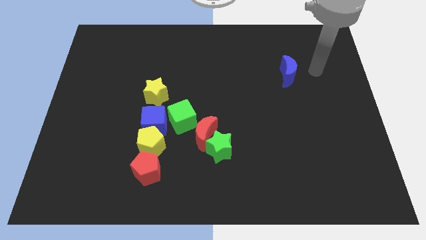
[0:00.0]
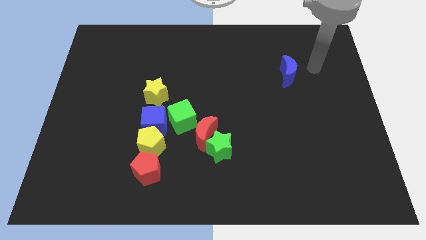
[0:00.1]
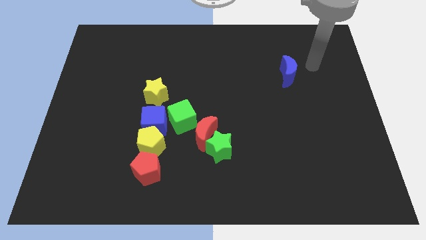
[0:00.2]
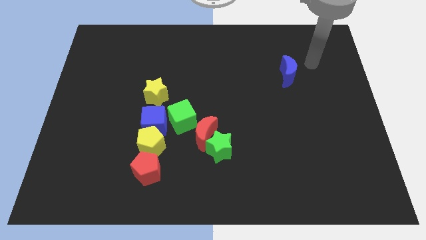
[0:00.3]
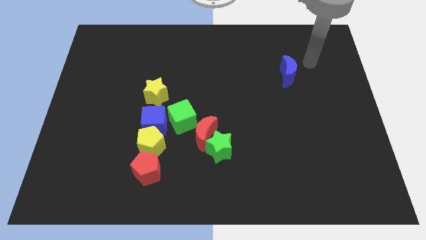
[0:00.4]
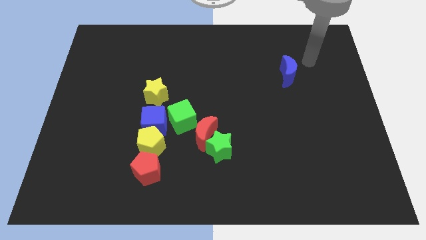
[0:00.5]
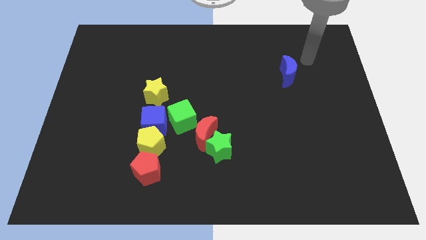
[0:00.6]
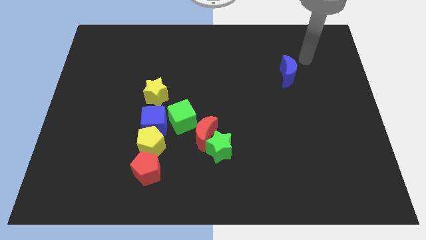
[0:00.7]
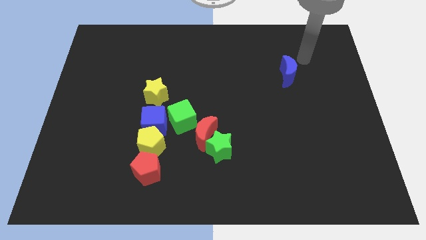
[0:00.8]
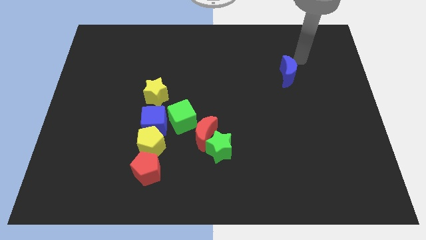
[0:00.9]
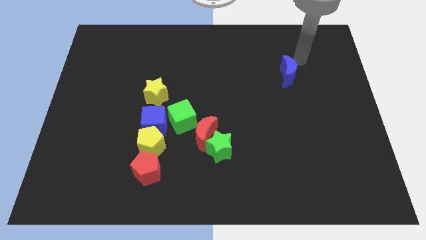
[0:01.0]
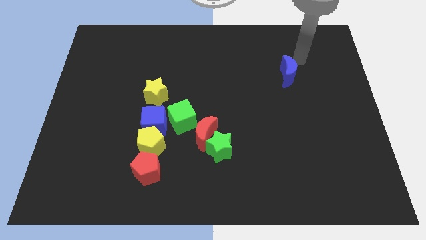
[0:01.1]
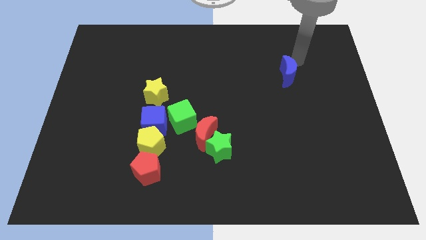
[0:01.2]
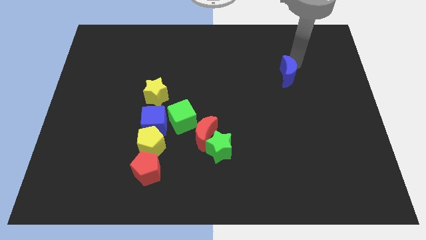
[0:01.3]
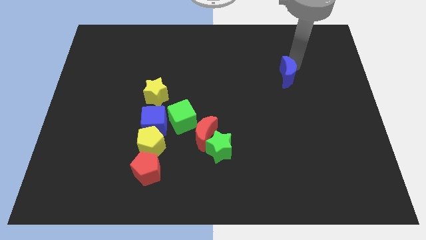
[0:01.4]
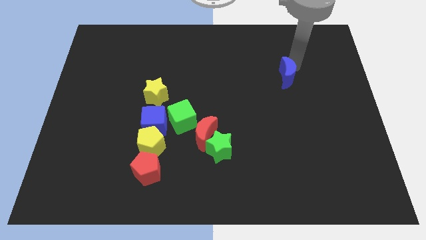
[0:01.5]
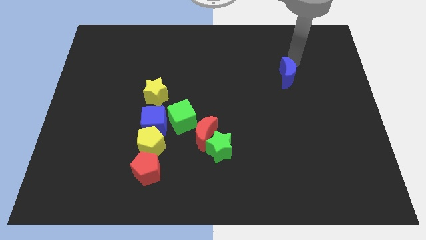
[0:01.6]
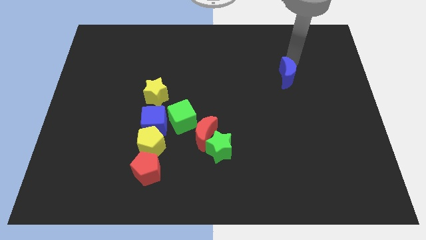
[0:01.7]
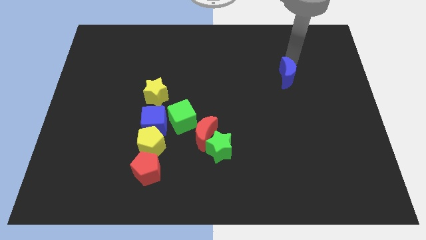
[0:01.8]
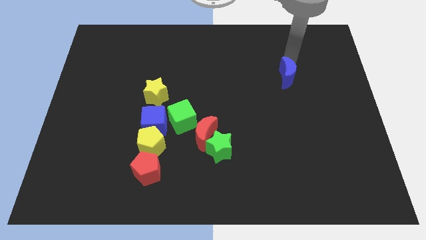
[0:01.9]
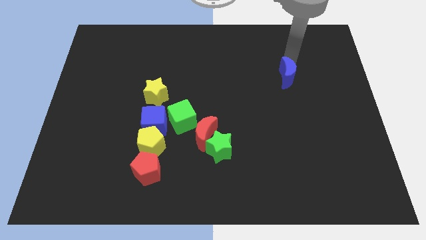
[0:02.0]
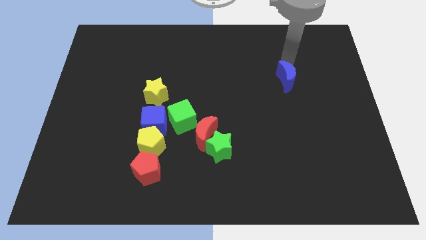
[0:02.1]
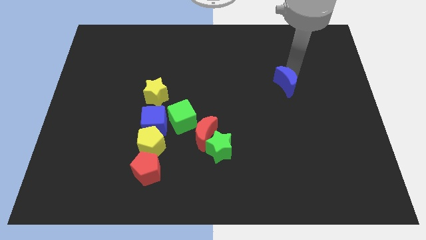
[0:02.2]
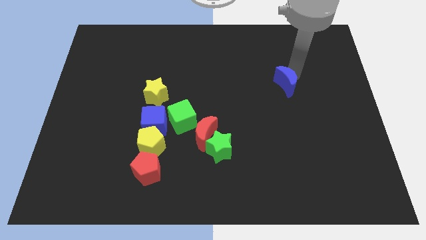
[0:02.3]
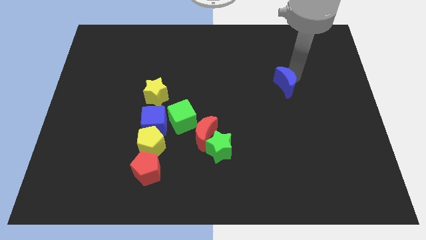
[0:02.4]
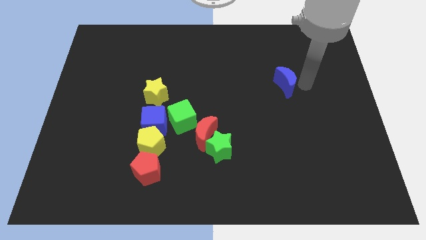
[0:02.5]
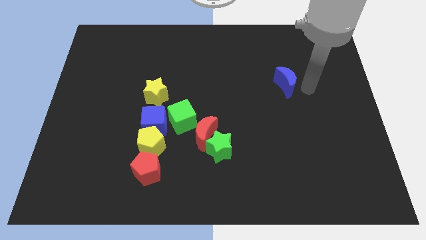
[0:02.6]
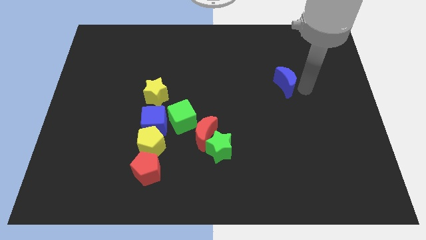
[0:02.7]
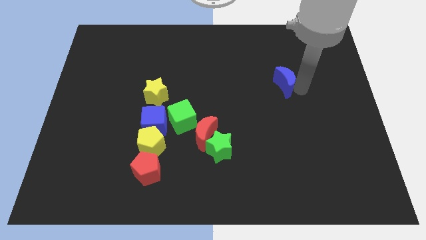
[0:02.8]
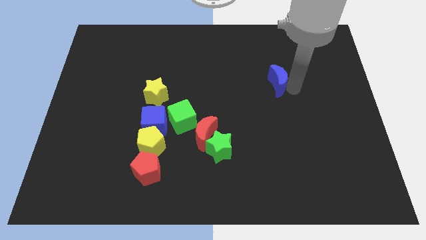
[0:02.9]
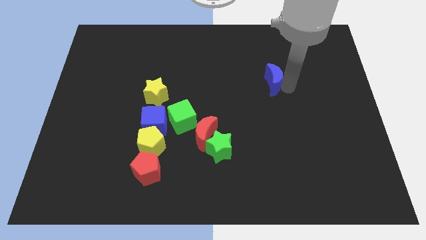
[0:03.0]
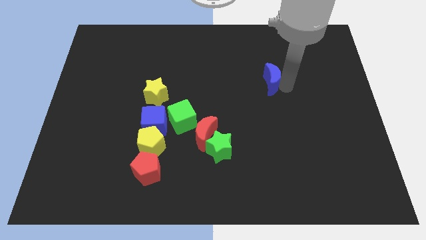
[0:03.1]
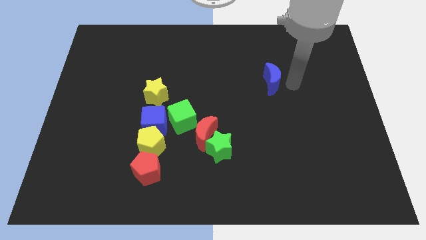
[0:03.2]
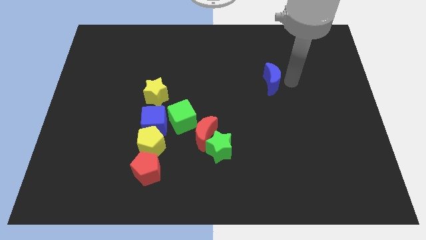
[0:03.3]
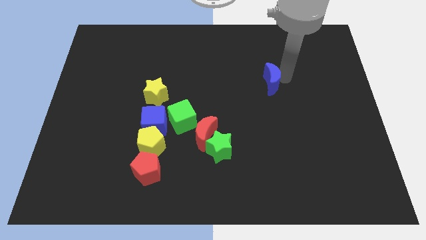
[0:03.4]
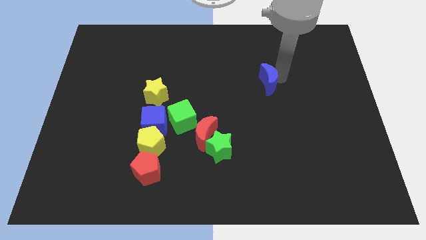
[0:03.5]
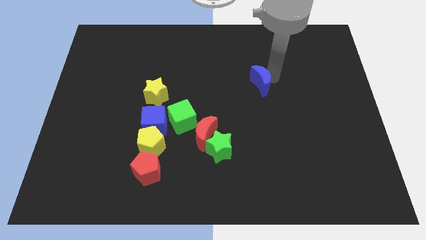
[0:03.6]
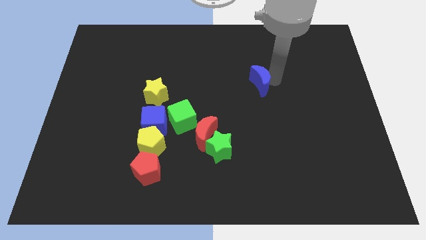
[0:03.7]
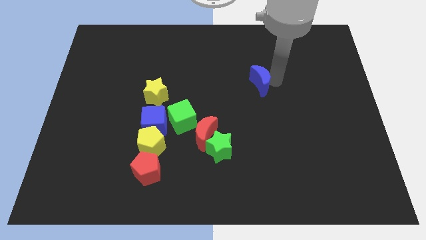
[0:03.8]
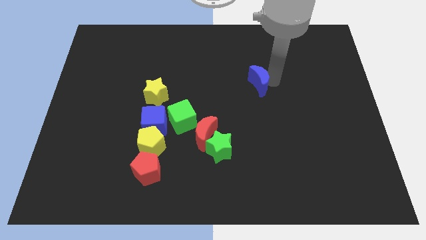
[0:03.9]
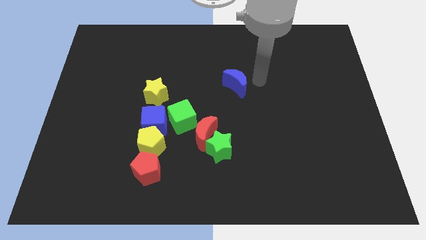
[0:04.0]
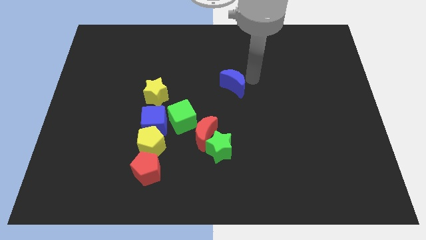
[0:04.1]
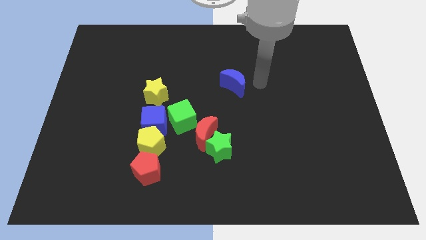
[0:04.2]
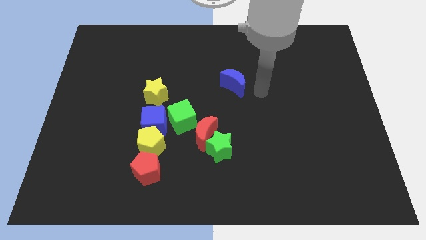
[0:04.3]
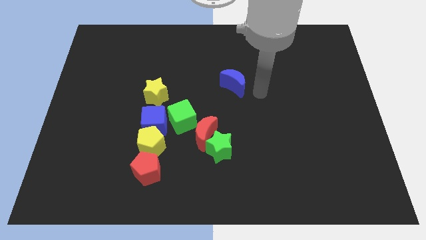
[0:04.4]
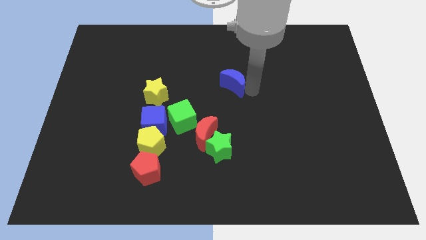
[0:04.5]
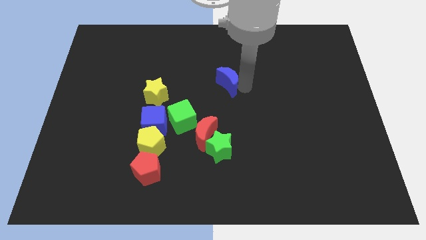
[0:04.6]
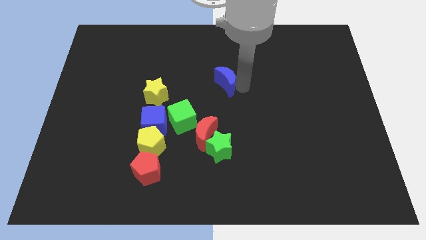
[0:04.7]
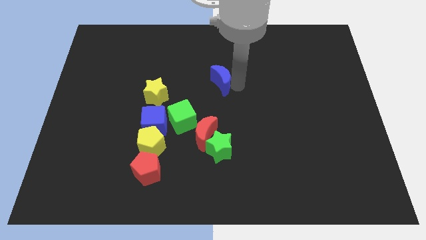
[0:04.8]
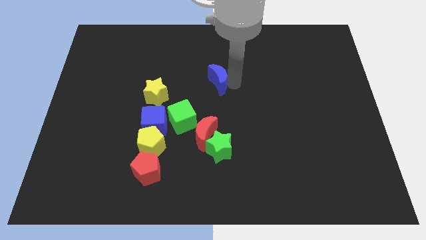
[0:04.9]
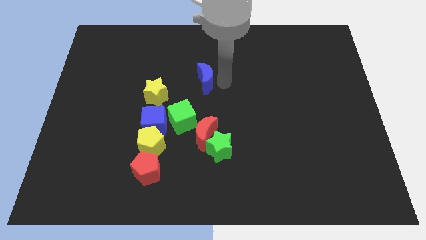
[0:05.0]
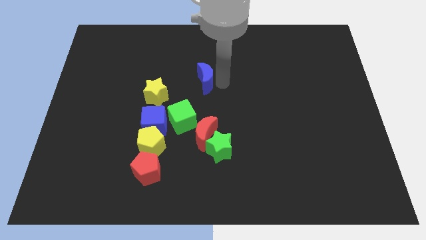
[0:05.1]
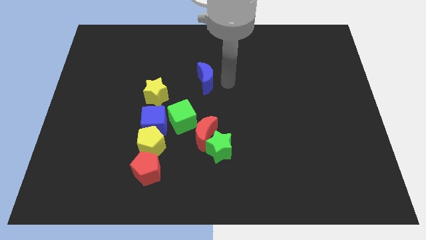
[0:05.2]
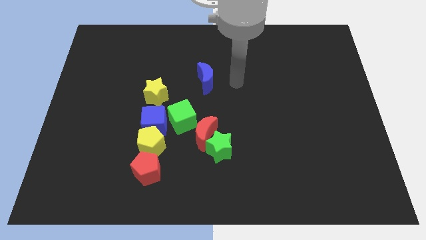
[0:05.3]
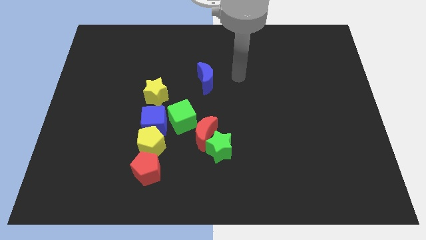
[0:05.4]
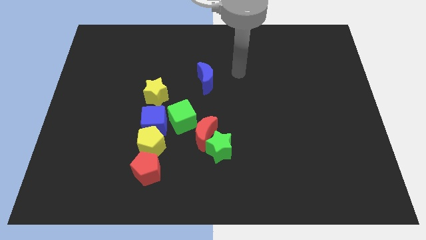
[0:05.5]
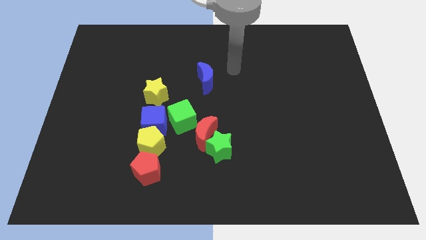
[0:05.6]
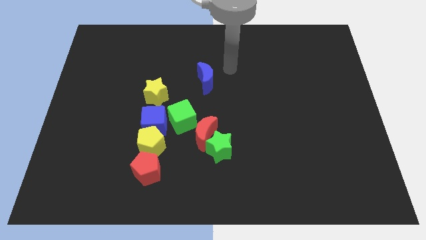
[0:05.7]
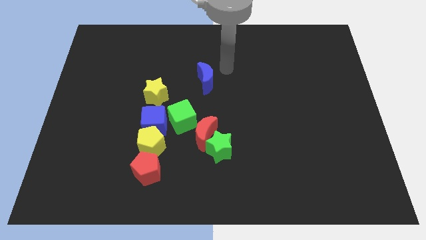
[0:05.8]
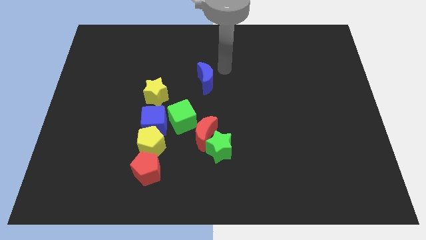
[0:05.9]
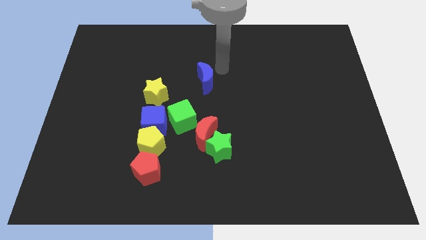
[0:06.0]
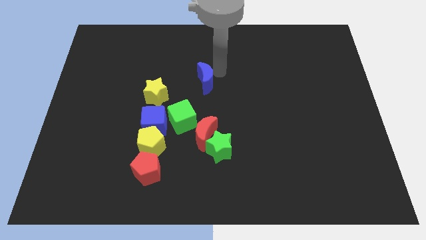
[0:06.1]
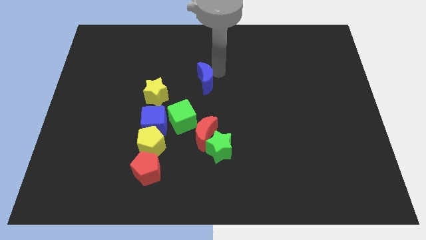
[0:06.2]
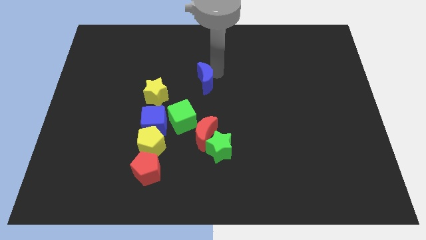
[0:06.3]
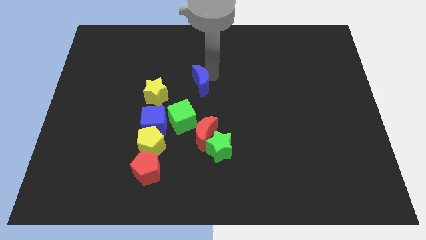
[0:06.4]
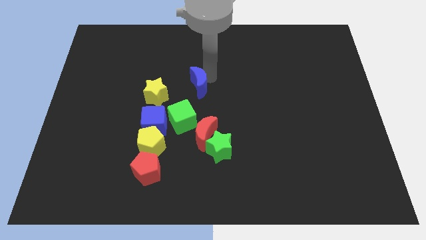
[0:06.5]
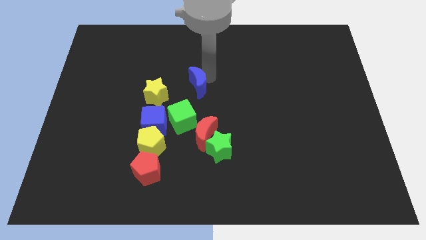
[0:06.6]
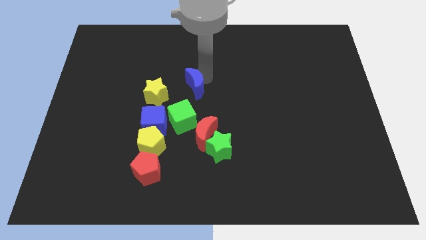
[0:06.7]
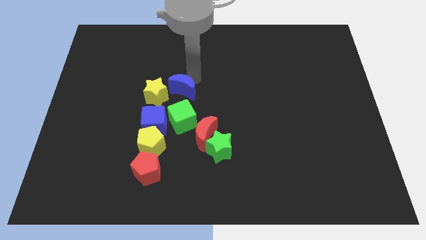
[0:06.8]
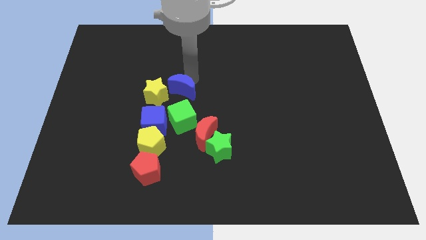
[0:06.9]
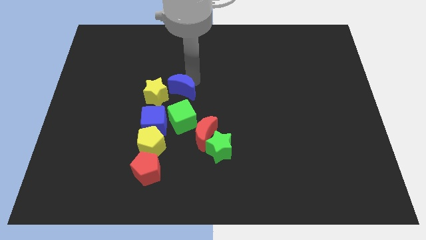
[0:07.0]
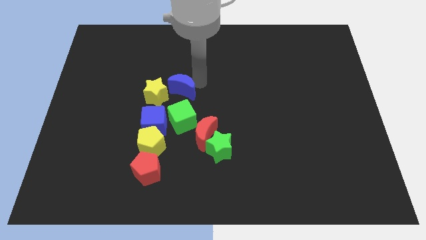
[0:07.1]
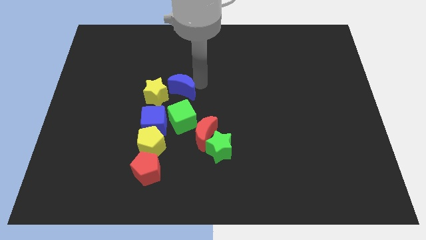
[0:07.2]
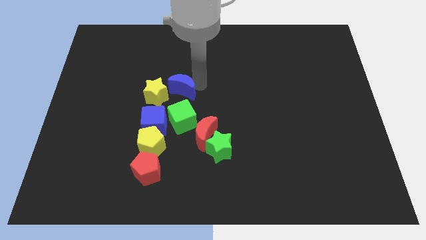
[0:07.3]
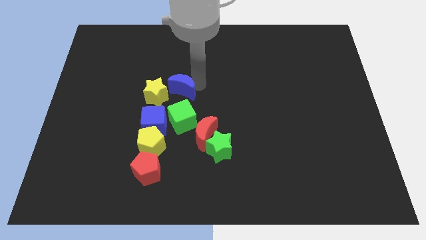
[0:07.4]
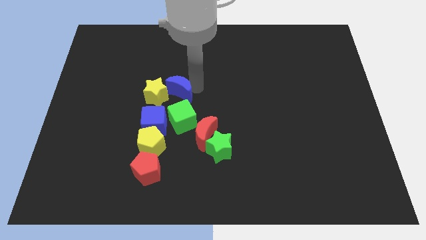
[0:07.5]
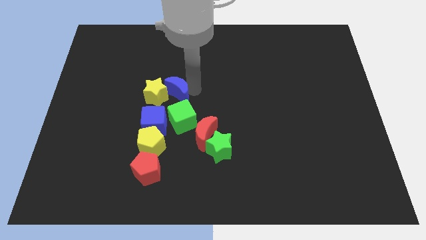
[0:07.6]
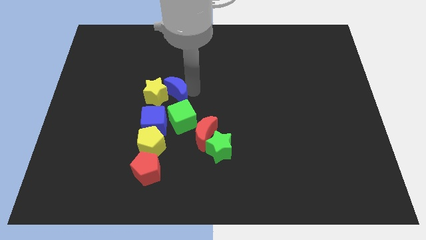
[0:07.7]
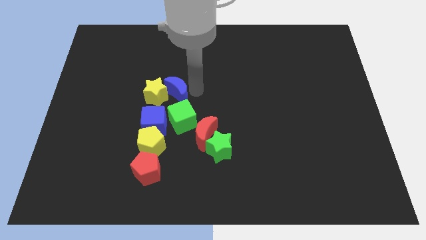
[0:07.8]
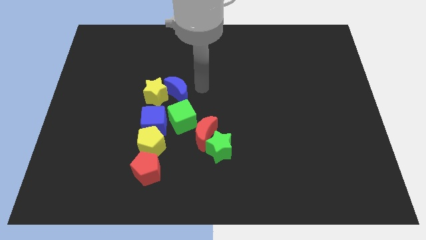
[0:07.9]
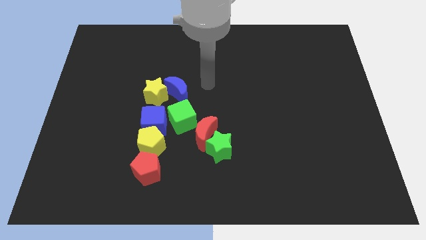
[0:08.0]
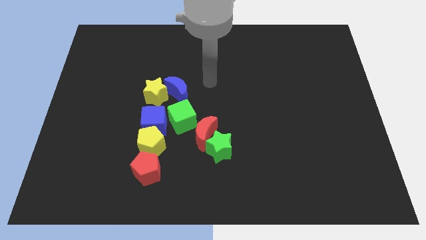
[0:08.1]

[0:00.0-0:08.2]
add blue moon into yellow star

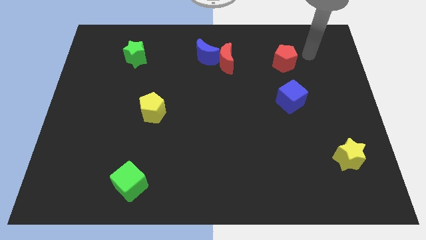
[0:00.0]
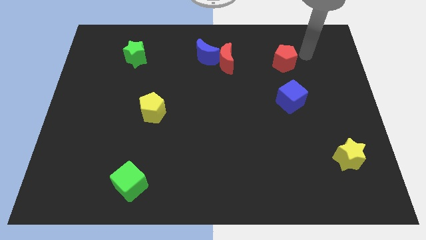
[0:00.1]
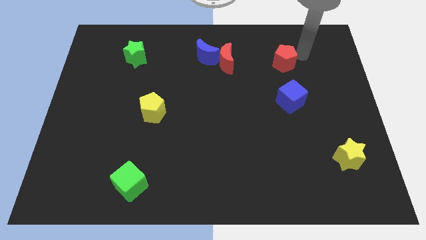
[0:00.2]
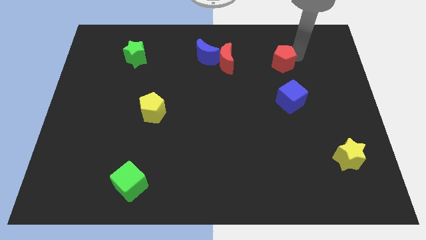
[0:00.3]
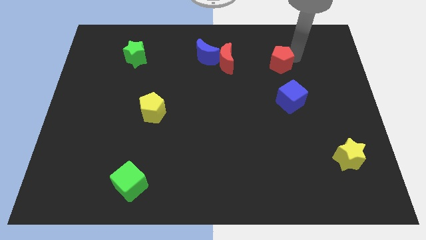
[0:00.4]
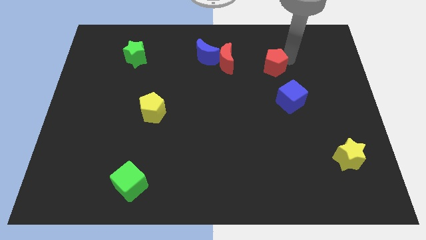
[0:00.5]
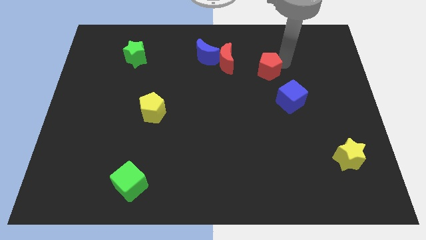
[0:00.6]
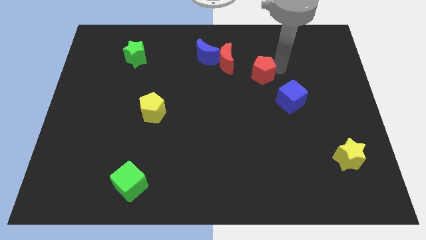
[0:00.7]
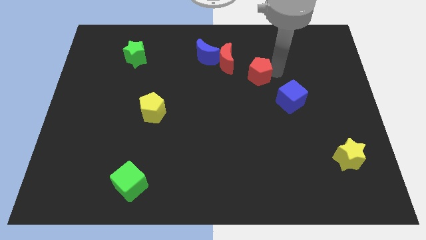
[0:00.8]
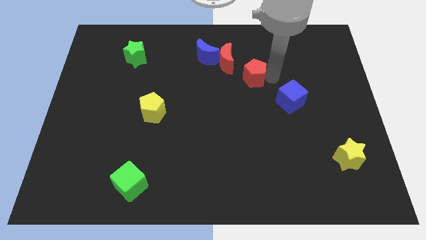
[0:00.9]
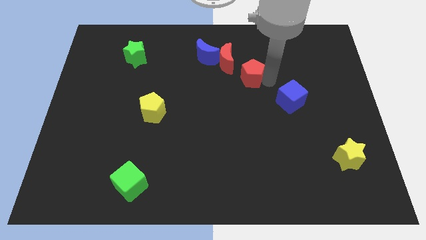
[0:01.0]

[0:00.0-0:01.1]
place the red pentagon to the center
